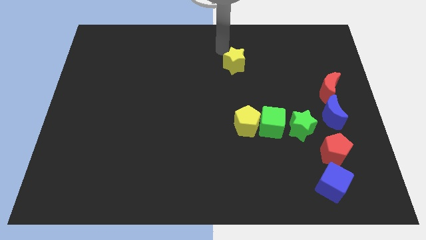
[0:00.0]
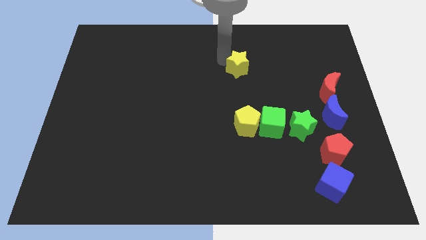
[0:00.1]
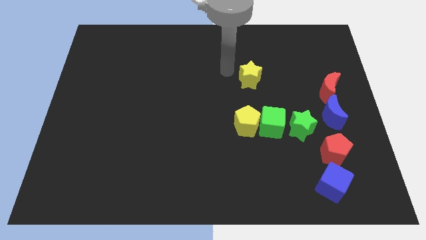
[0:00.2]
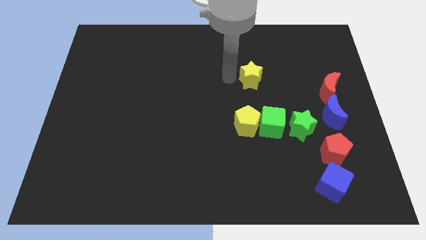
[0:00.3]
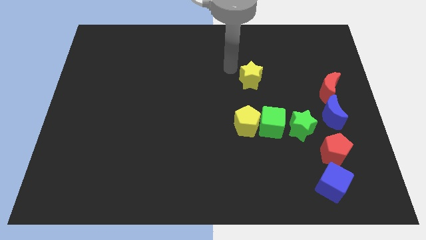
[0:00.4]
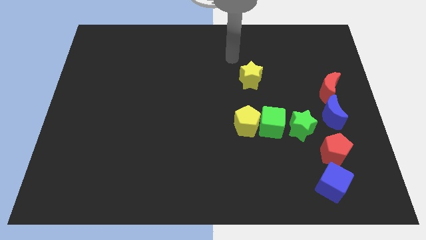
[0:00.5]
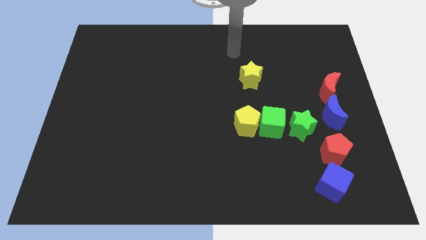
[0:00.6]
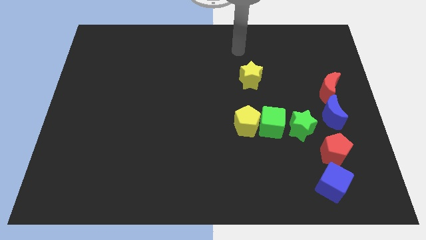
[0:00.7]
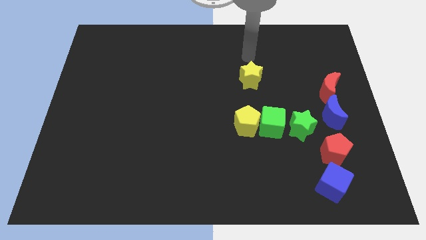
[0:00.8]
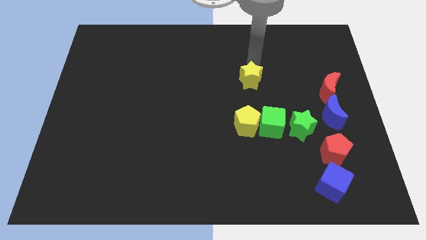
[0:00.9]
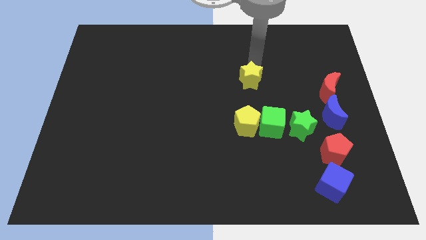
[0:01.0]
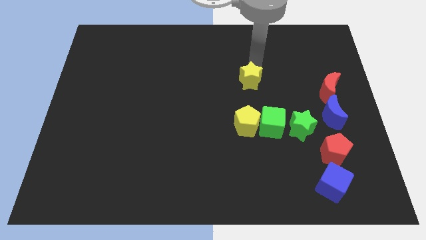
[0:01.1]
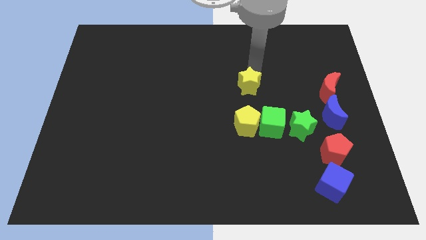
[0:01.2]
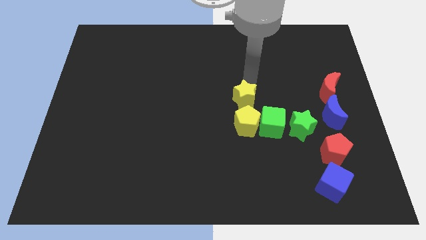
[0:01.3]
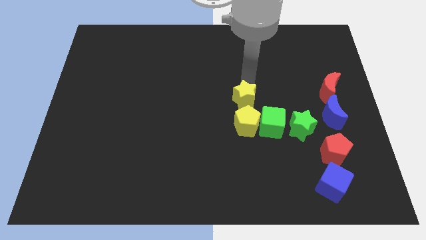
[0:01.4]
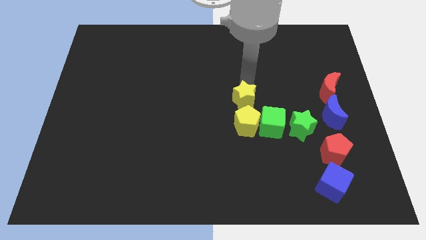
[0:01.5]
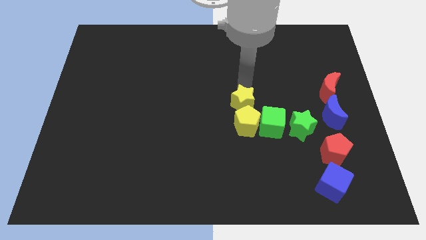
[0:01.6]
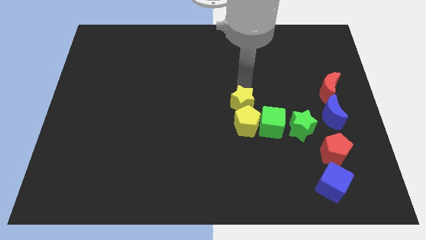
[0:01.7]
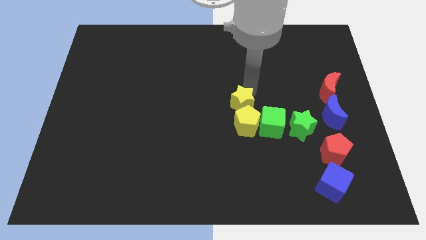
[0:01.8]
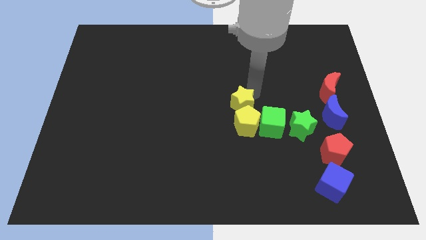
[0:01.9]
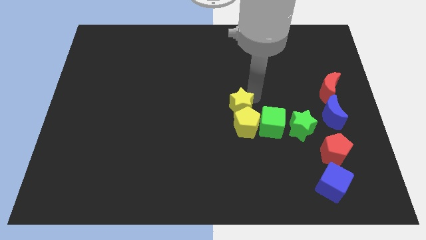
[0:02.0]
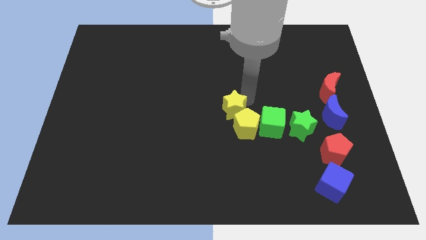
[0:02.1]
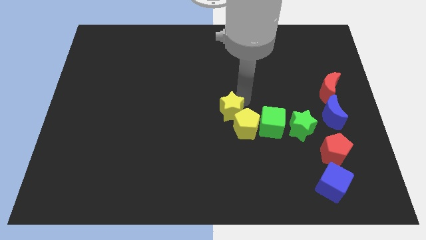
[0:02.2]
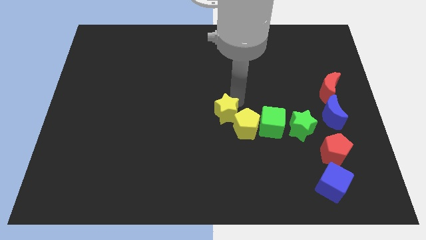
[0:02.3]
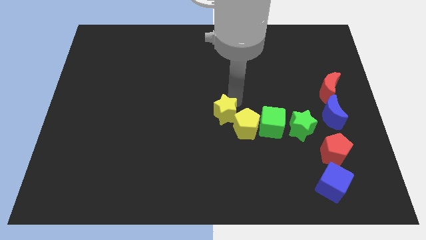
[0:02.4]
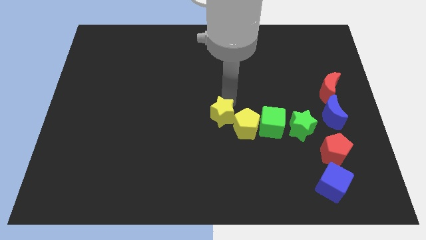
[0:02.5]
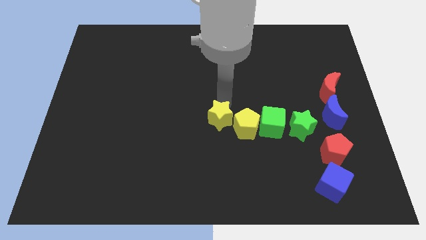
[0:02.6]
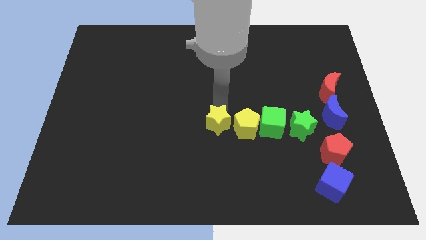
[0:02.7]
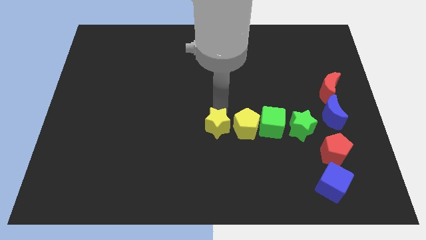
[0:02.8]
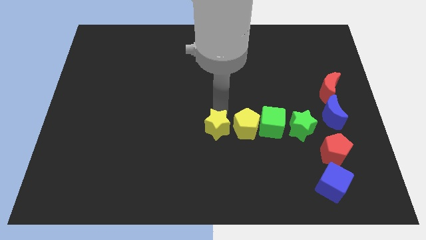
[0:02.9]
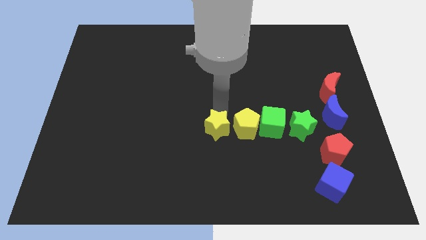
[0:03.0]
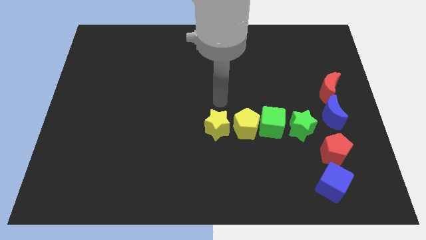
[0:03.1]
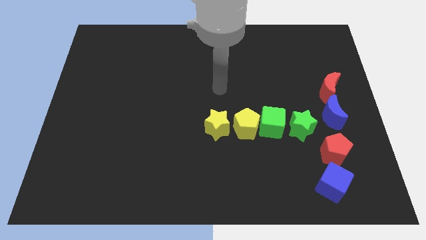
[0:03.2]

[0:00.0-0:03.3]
place the yellow star left to the yellow pentagon

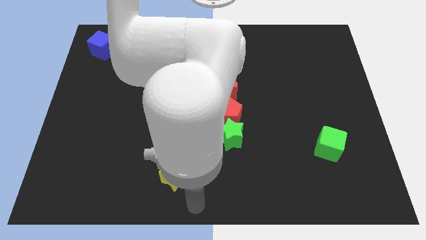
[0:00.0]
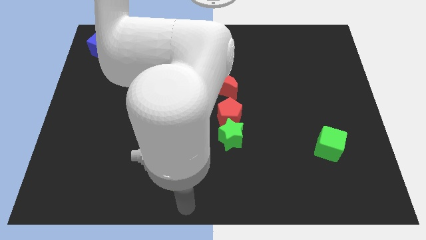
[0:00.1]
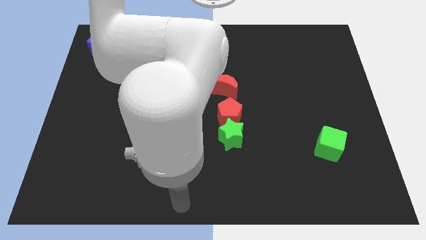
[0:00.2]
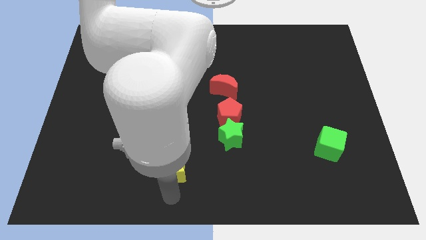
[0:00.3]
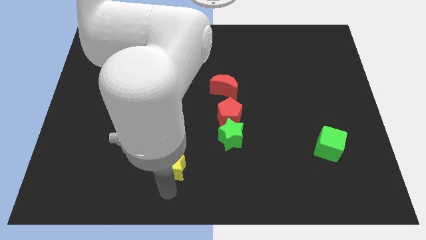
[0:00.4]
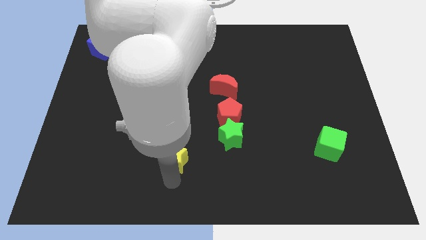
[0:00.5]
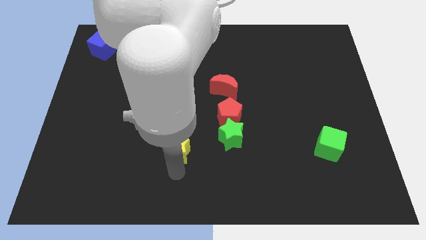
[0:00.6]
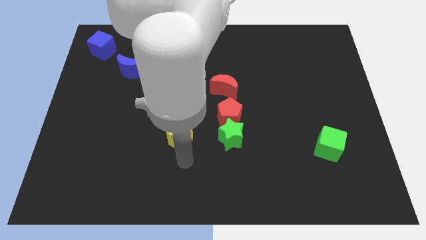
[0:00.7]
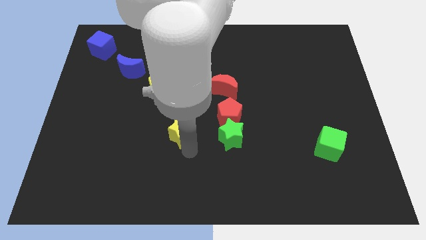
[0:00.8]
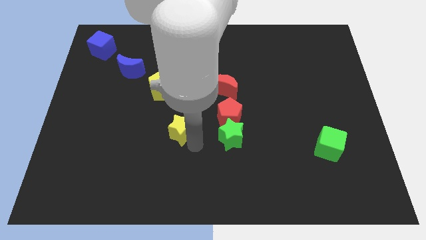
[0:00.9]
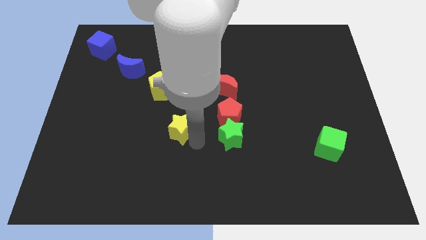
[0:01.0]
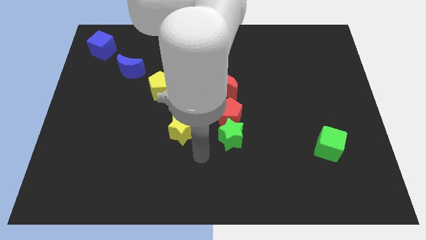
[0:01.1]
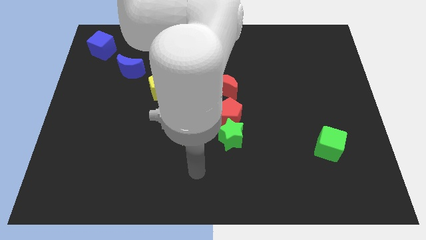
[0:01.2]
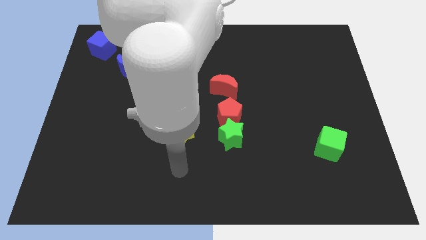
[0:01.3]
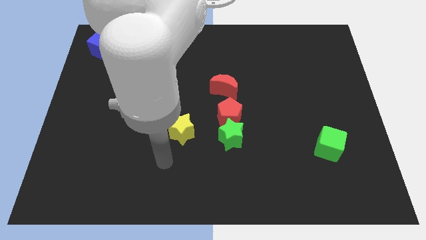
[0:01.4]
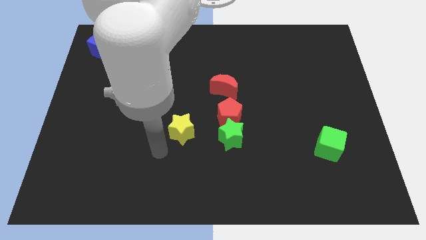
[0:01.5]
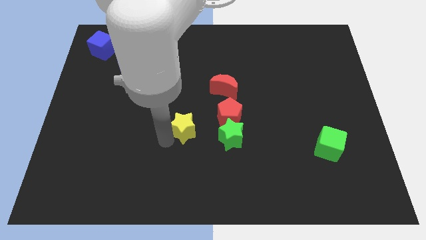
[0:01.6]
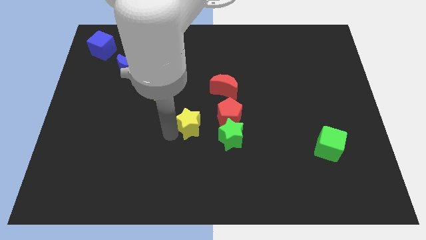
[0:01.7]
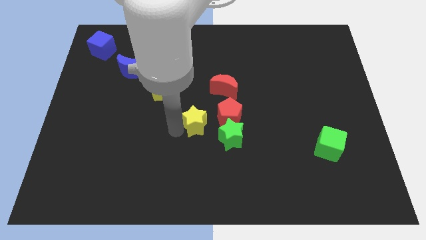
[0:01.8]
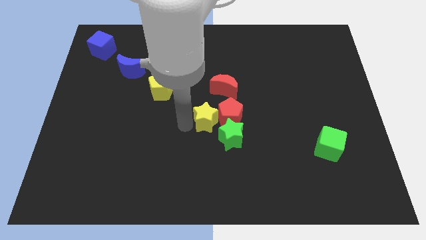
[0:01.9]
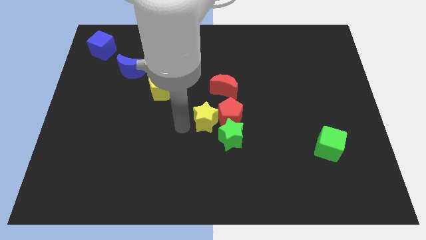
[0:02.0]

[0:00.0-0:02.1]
push the yellow star into the left of red pentagon

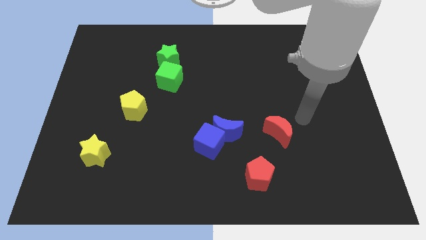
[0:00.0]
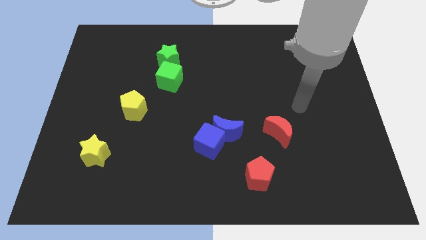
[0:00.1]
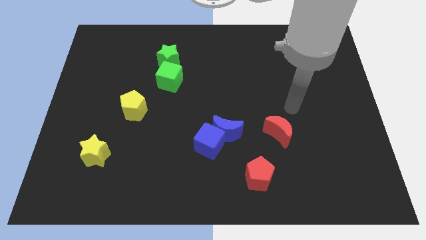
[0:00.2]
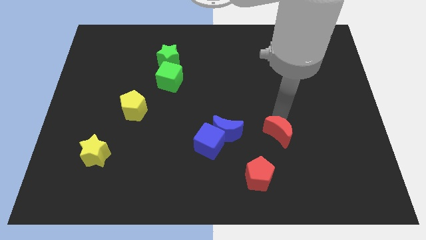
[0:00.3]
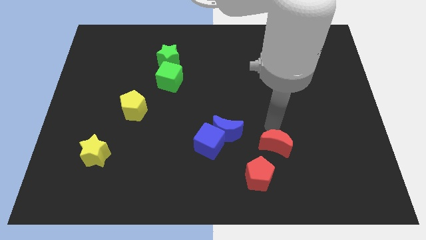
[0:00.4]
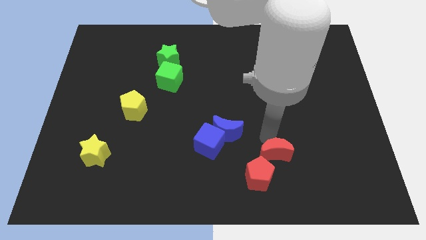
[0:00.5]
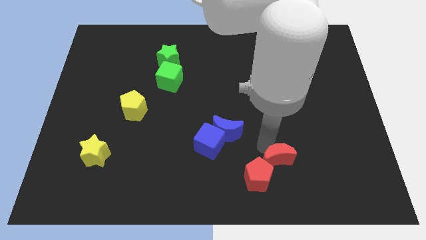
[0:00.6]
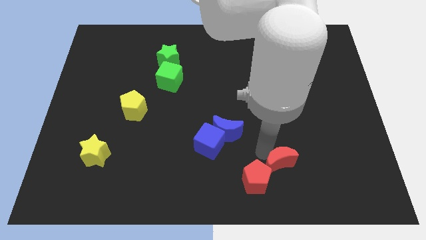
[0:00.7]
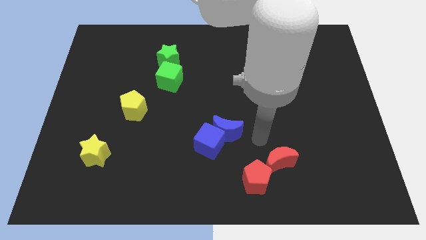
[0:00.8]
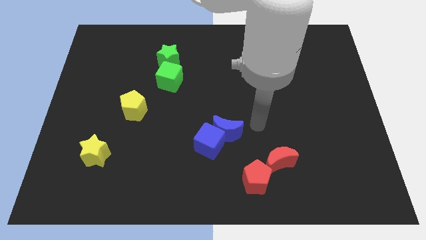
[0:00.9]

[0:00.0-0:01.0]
move red moon right above the red pentagon

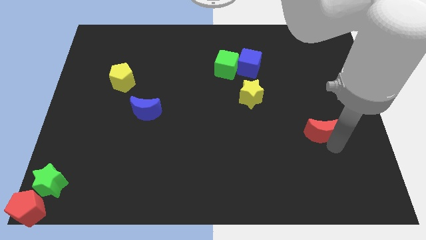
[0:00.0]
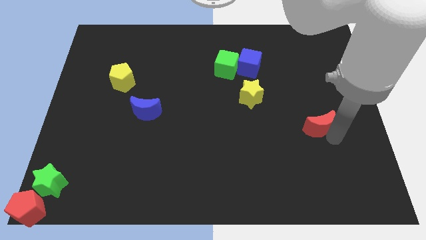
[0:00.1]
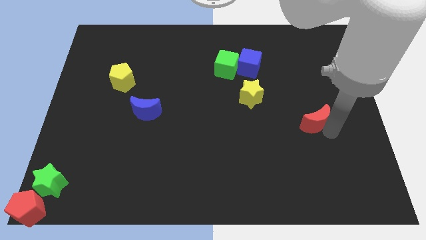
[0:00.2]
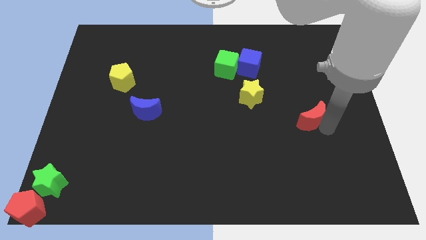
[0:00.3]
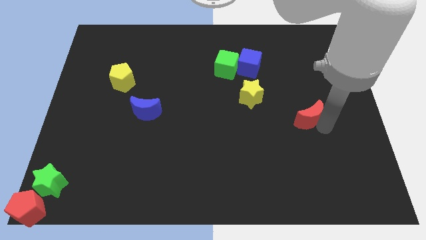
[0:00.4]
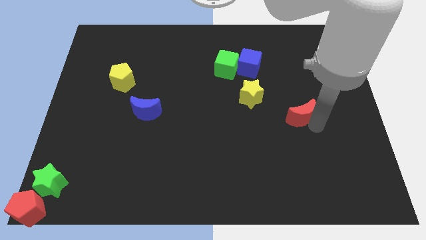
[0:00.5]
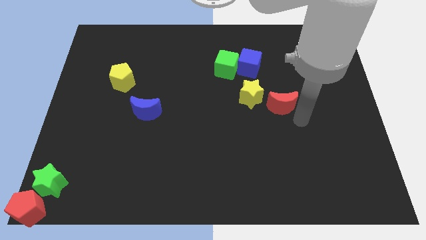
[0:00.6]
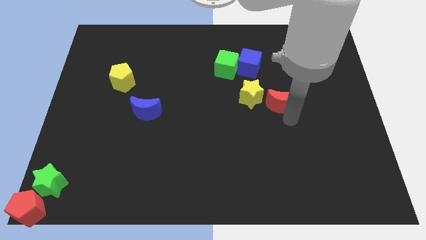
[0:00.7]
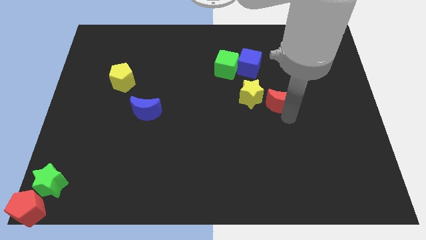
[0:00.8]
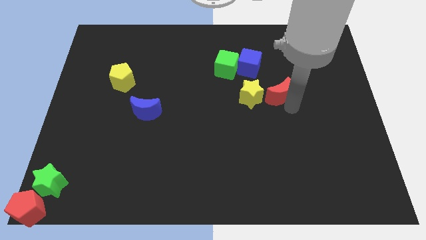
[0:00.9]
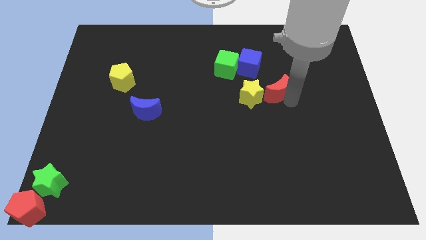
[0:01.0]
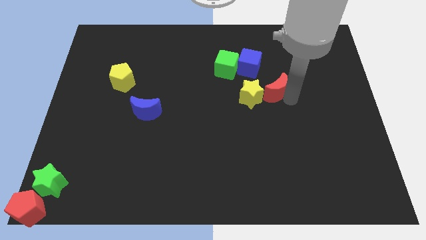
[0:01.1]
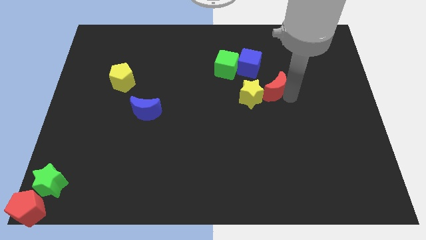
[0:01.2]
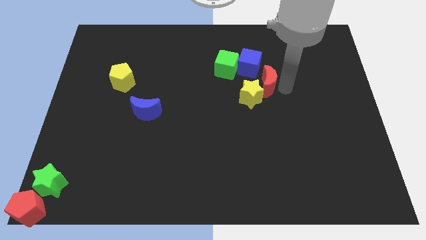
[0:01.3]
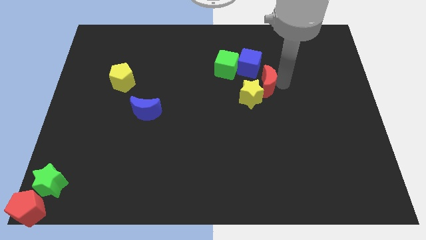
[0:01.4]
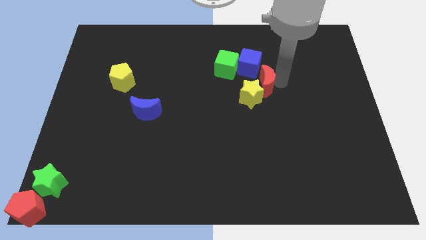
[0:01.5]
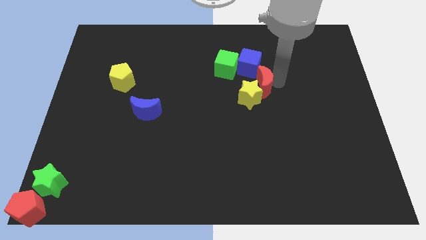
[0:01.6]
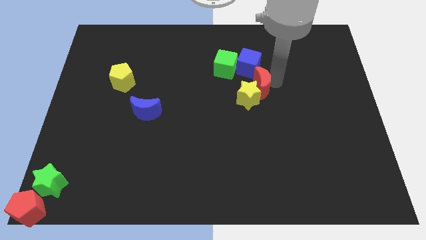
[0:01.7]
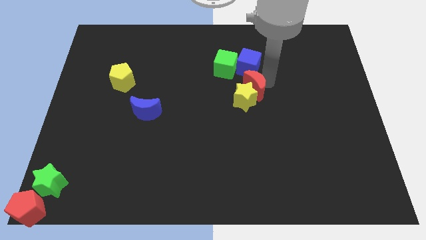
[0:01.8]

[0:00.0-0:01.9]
drag the red moon into the right side of the yellow star

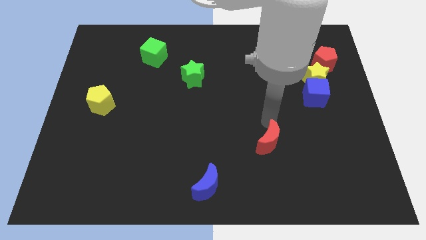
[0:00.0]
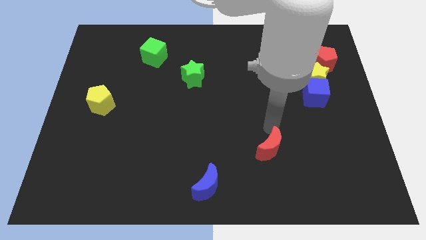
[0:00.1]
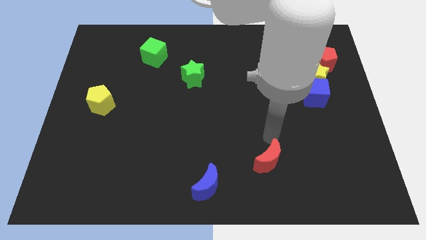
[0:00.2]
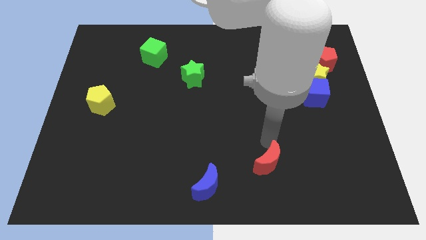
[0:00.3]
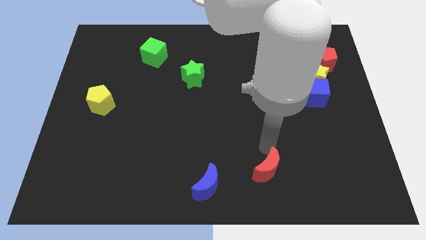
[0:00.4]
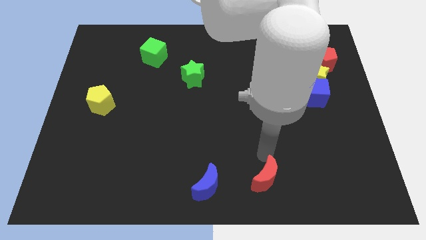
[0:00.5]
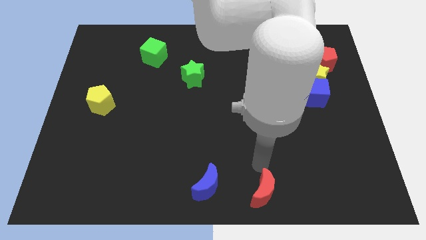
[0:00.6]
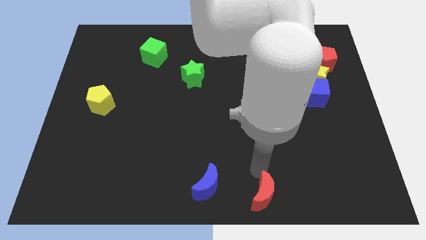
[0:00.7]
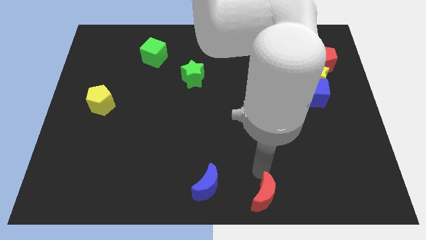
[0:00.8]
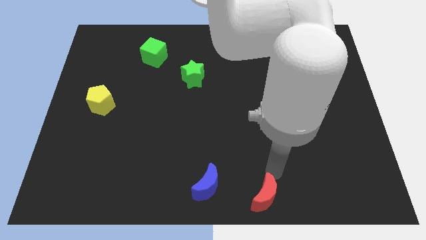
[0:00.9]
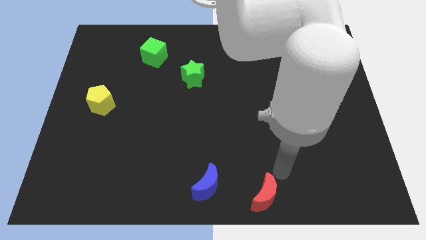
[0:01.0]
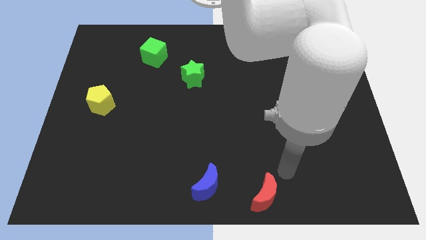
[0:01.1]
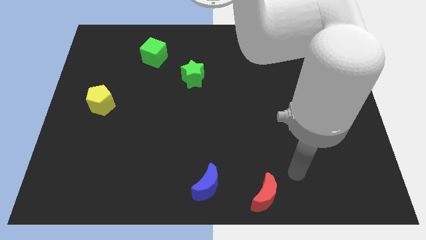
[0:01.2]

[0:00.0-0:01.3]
push the red crescent to the bottom of the board
